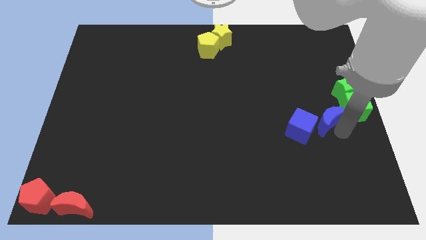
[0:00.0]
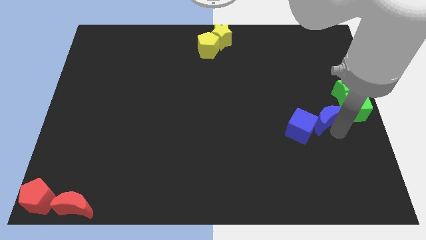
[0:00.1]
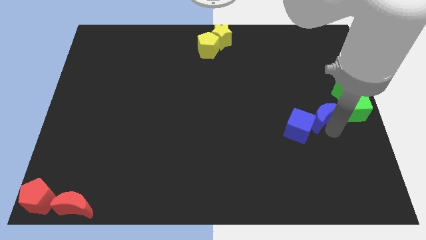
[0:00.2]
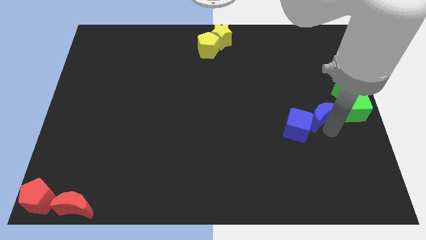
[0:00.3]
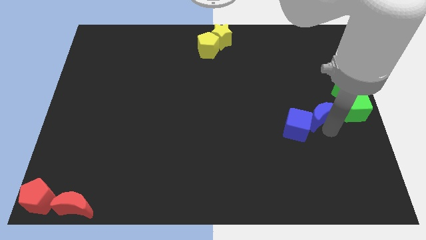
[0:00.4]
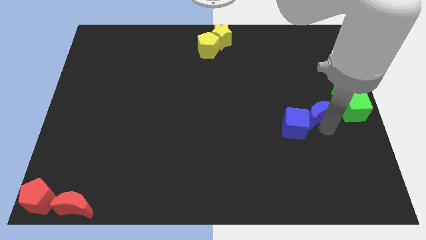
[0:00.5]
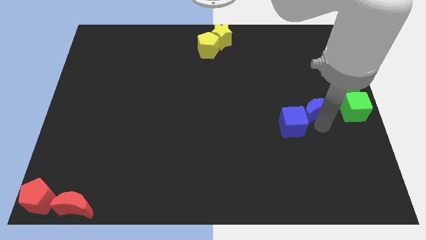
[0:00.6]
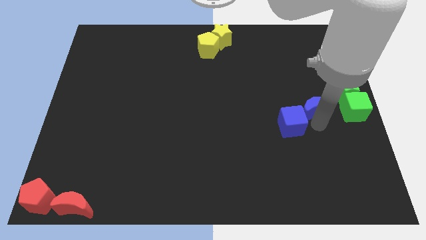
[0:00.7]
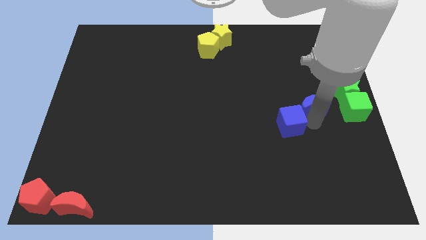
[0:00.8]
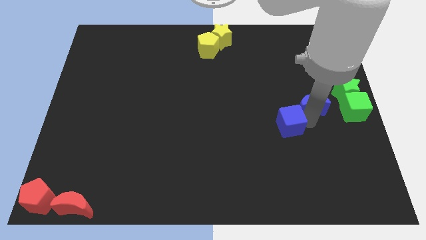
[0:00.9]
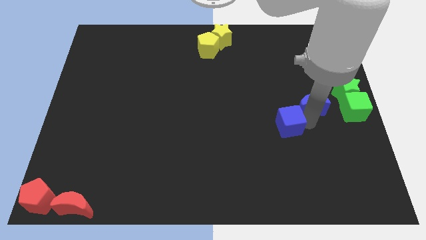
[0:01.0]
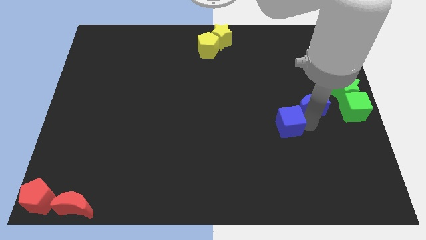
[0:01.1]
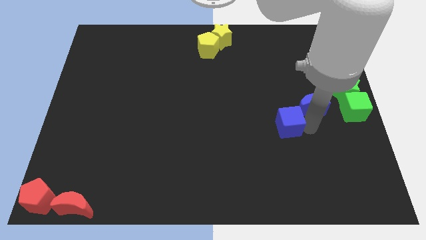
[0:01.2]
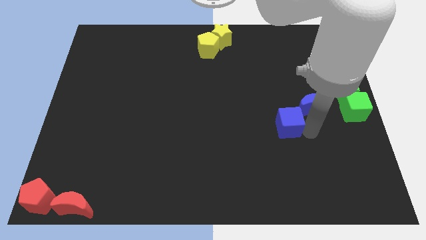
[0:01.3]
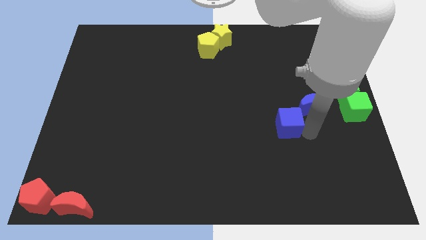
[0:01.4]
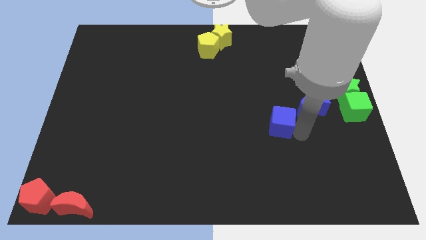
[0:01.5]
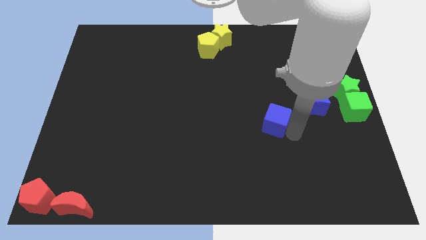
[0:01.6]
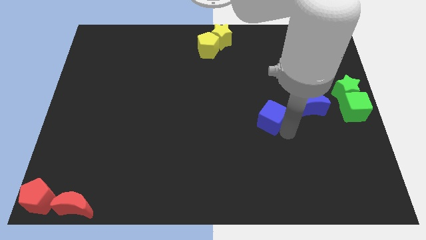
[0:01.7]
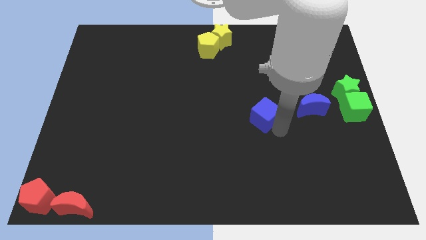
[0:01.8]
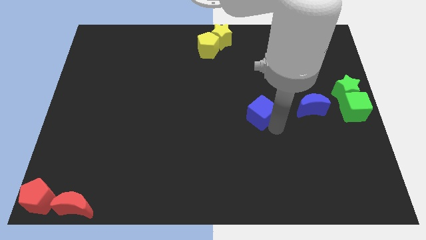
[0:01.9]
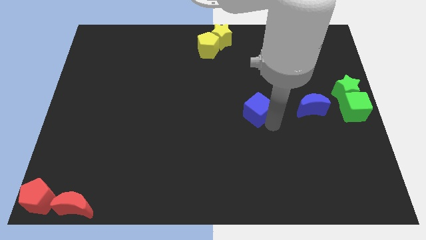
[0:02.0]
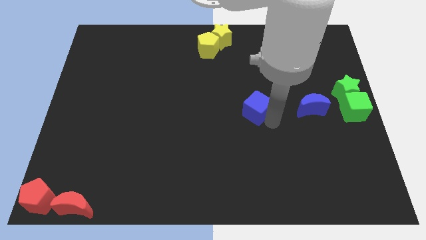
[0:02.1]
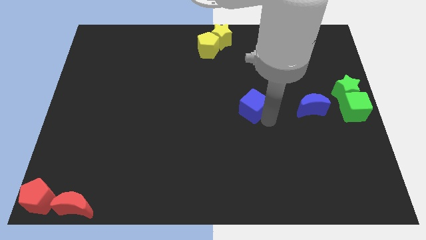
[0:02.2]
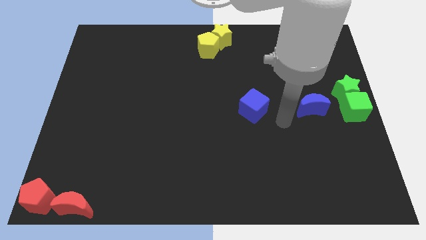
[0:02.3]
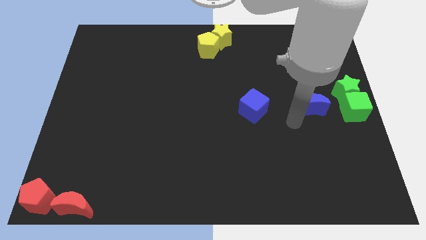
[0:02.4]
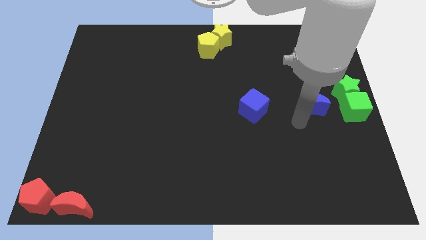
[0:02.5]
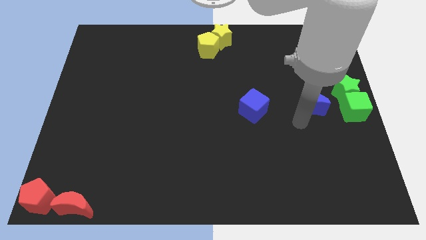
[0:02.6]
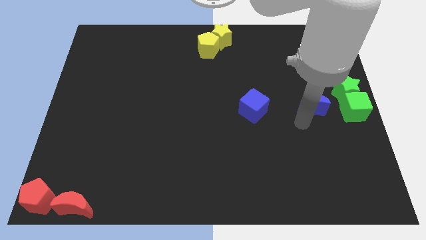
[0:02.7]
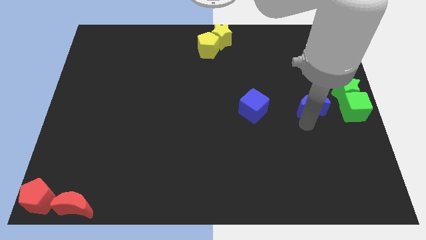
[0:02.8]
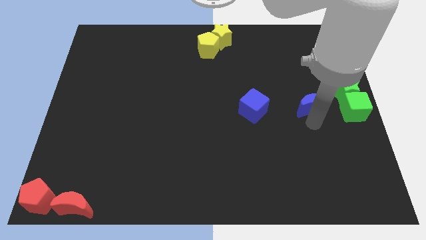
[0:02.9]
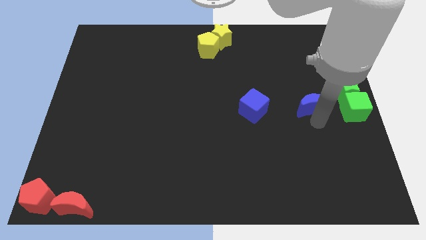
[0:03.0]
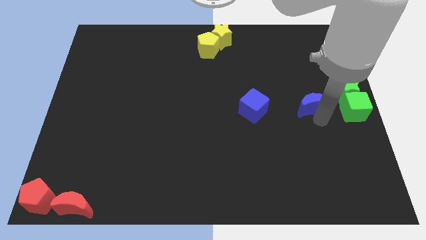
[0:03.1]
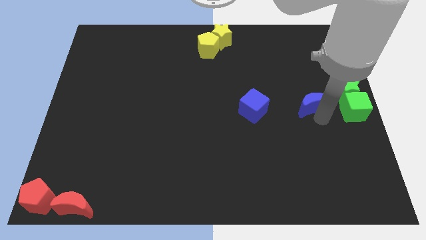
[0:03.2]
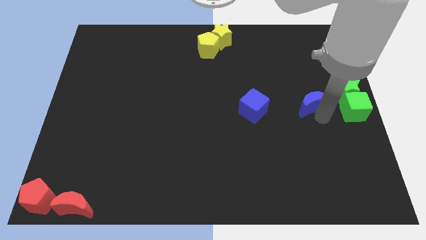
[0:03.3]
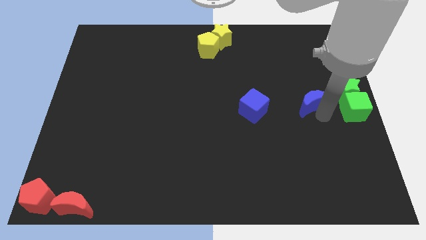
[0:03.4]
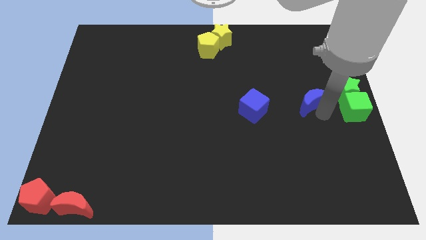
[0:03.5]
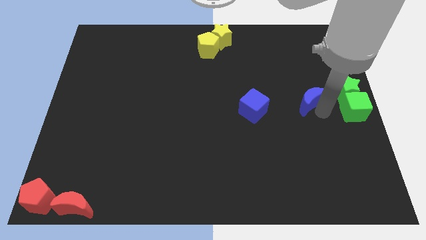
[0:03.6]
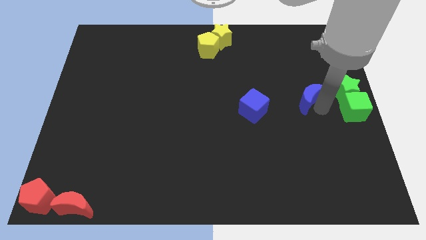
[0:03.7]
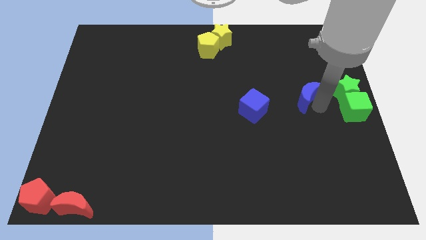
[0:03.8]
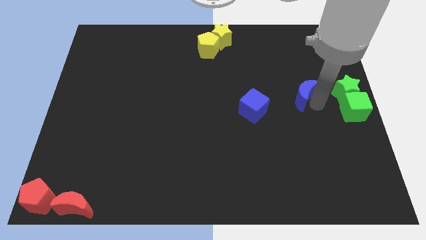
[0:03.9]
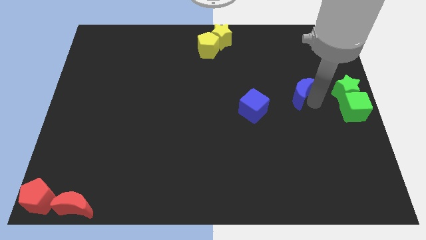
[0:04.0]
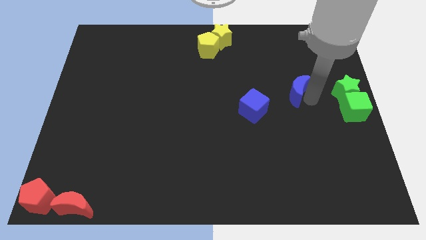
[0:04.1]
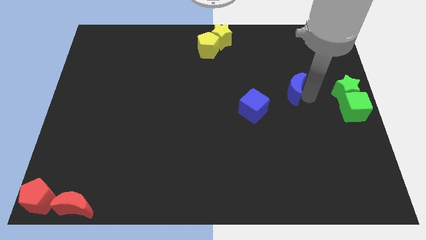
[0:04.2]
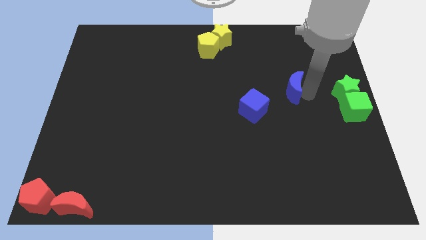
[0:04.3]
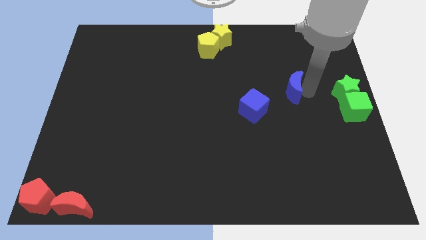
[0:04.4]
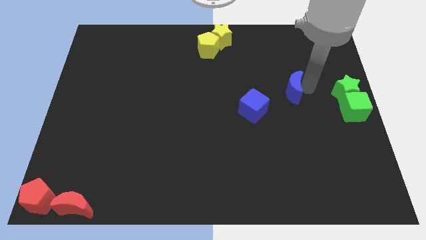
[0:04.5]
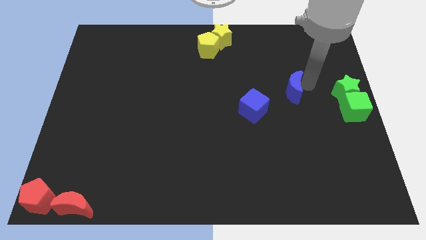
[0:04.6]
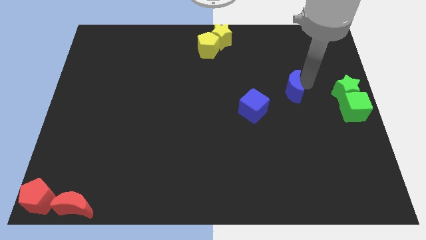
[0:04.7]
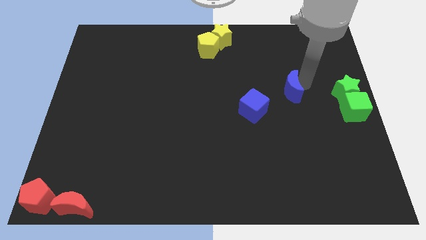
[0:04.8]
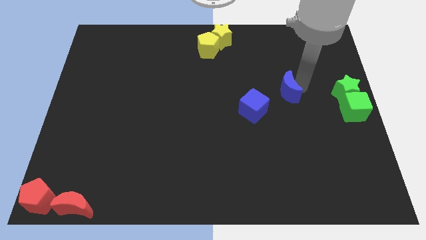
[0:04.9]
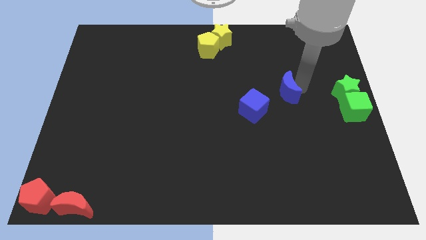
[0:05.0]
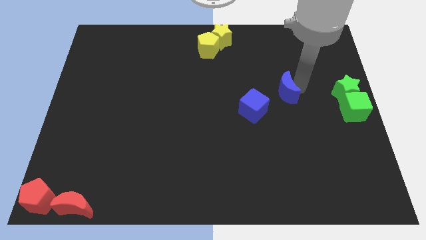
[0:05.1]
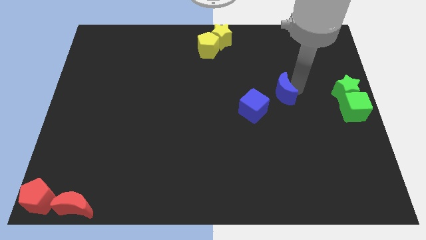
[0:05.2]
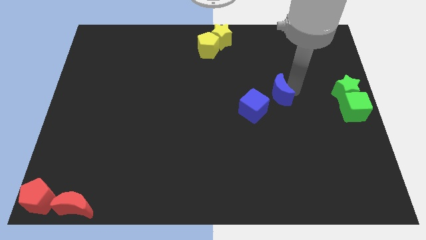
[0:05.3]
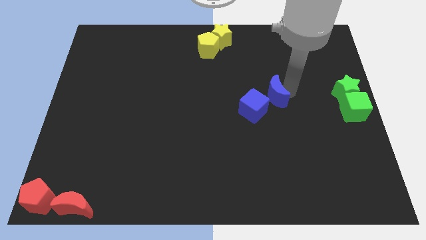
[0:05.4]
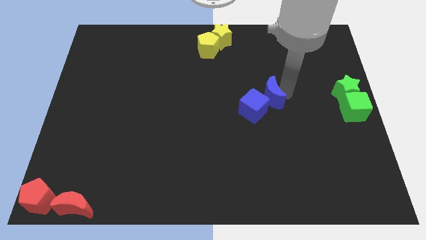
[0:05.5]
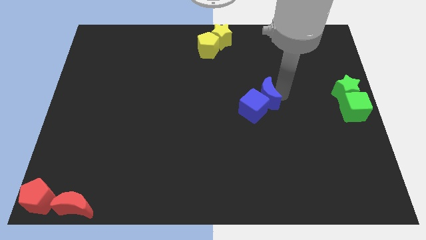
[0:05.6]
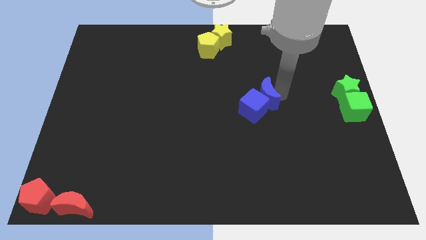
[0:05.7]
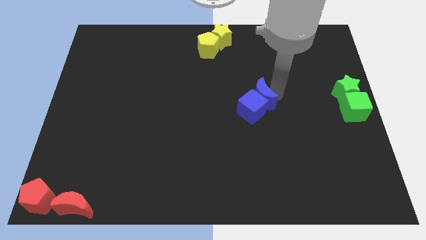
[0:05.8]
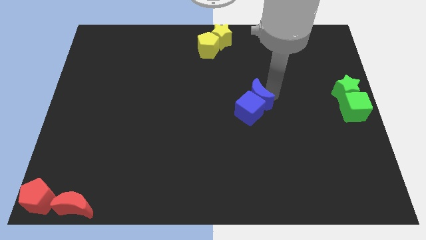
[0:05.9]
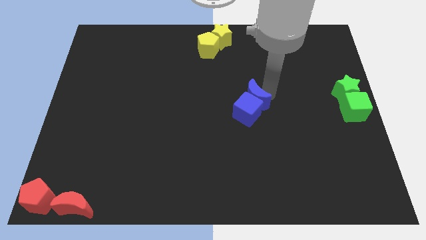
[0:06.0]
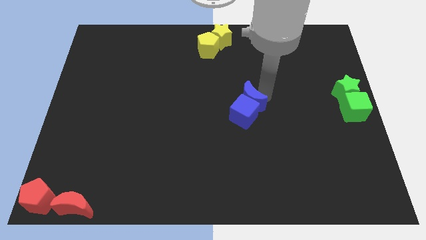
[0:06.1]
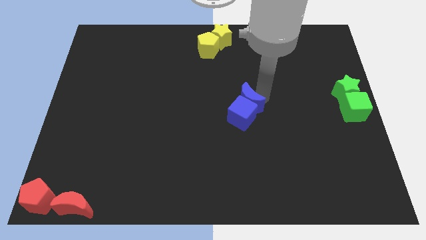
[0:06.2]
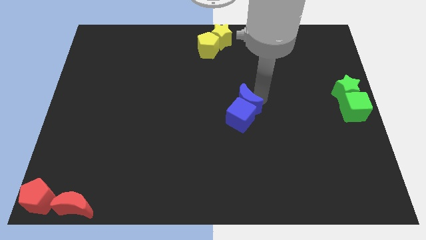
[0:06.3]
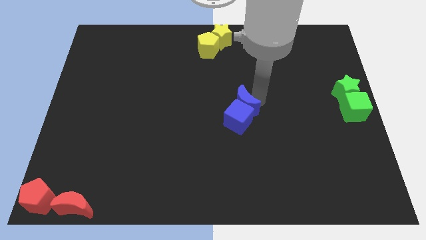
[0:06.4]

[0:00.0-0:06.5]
slide the blue blocks towards the center of the board

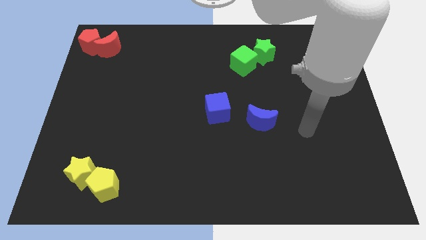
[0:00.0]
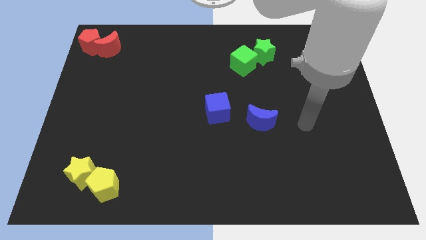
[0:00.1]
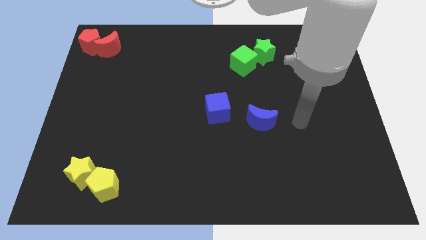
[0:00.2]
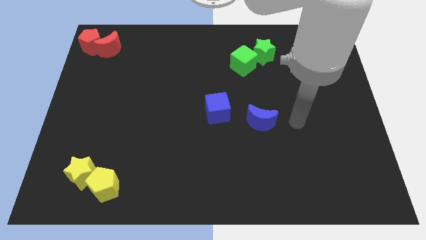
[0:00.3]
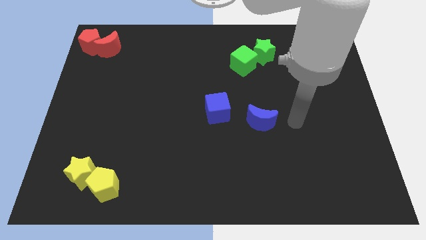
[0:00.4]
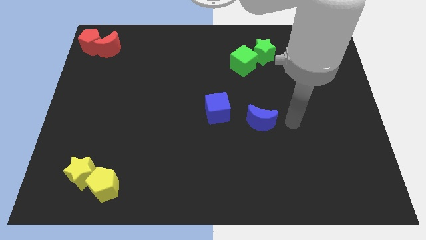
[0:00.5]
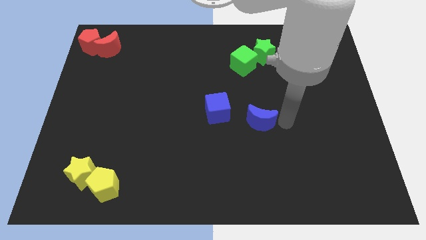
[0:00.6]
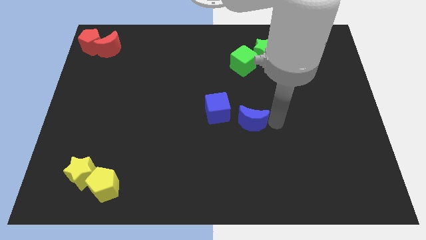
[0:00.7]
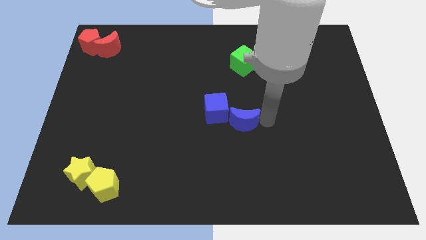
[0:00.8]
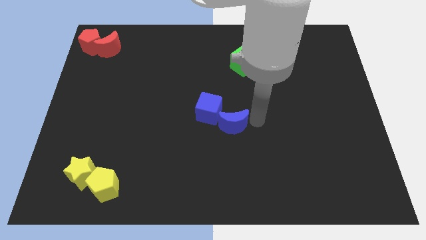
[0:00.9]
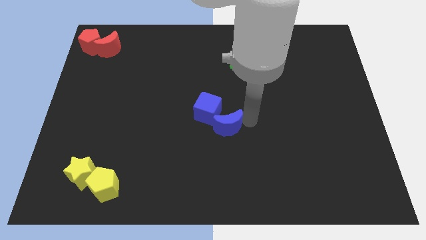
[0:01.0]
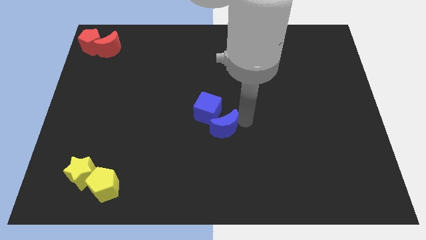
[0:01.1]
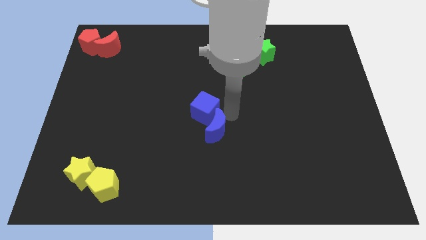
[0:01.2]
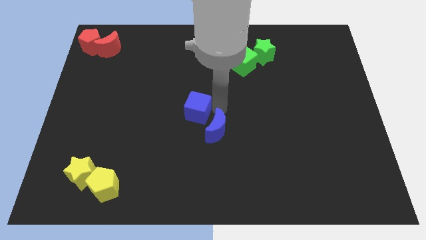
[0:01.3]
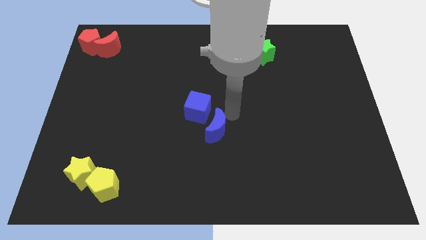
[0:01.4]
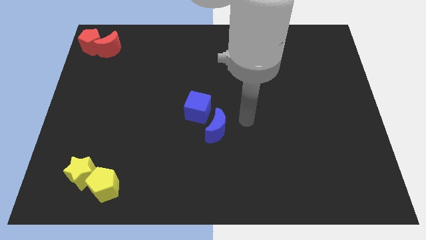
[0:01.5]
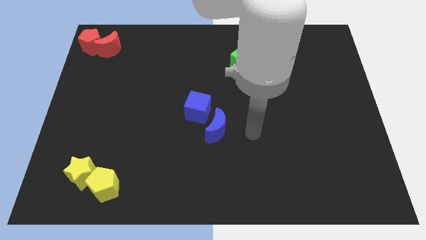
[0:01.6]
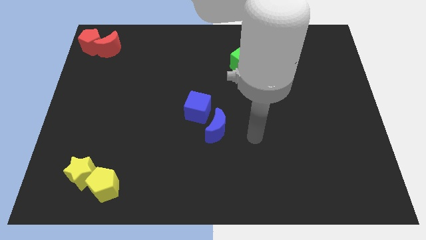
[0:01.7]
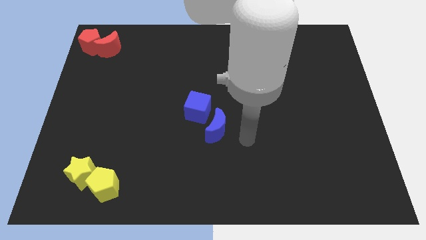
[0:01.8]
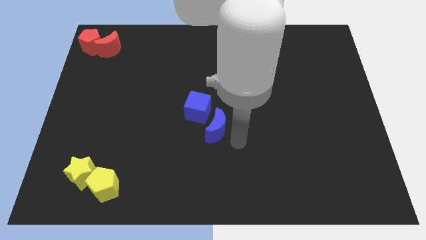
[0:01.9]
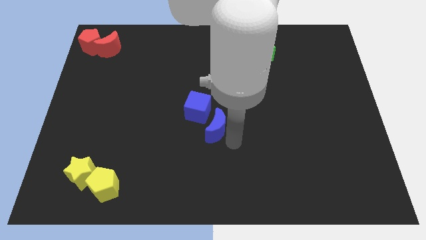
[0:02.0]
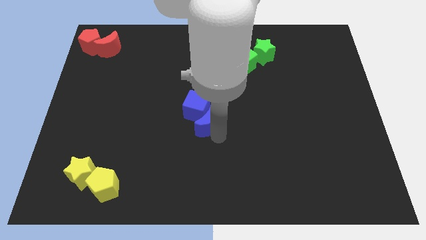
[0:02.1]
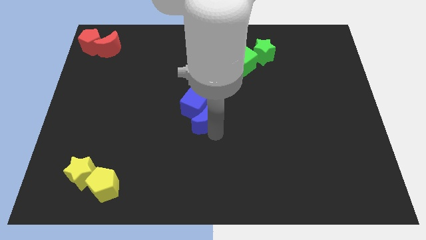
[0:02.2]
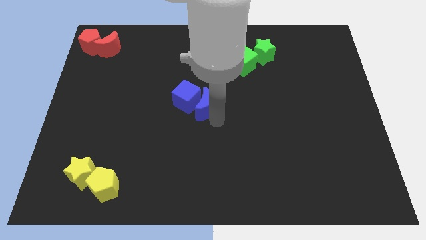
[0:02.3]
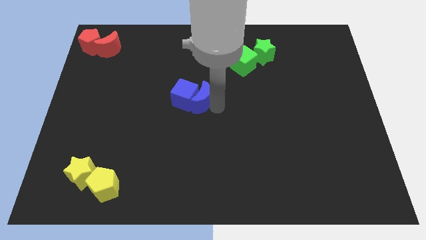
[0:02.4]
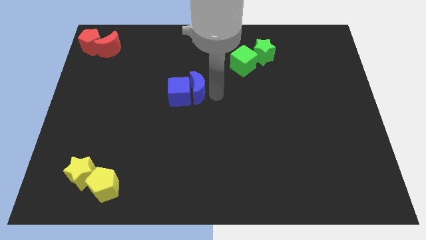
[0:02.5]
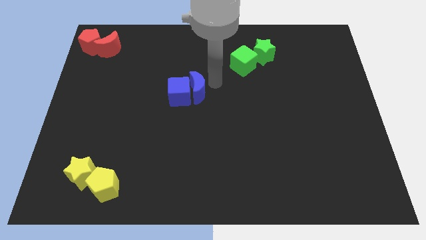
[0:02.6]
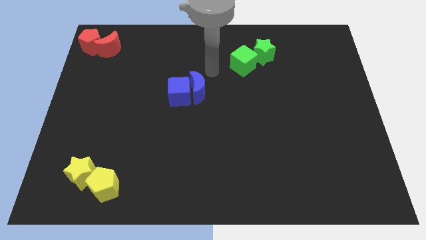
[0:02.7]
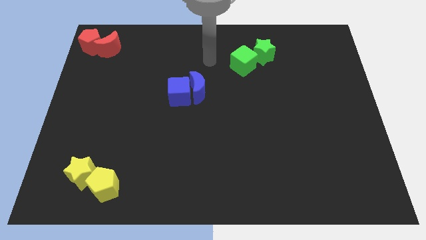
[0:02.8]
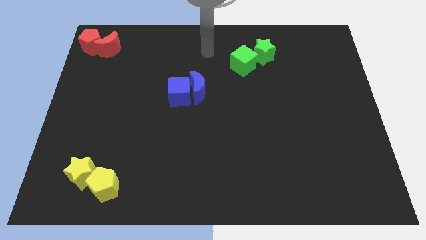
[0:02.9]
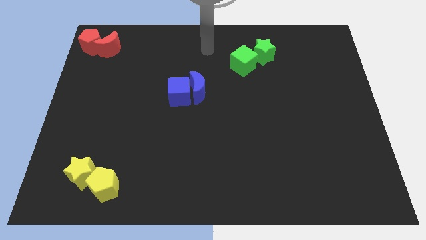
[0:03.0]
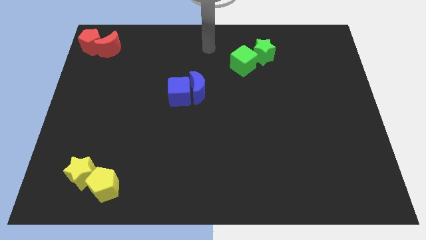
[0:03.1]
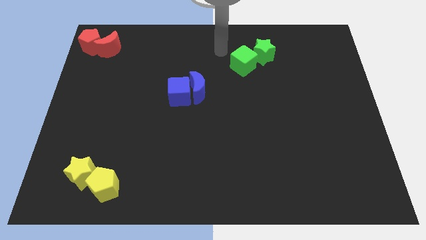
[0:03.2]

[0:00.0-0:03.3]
push blue crescent into the blue cube
